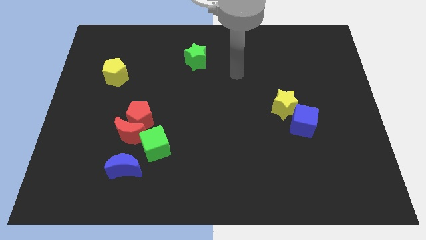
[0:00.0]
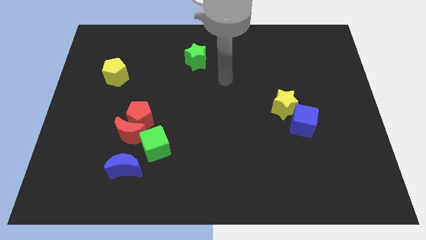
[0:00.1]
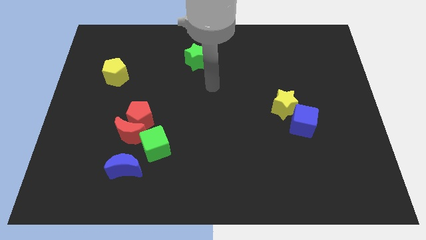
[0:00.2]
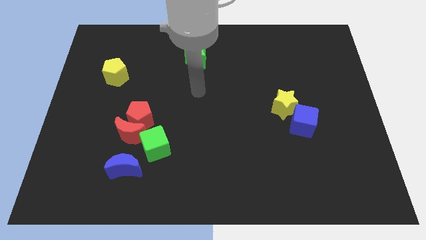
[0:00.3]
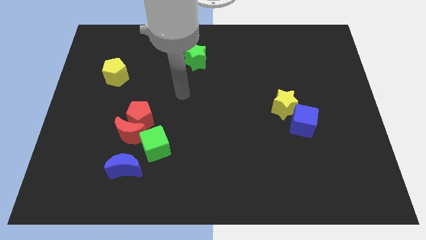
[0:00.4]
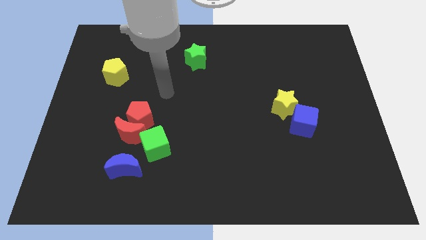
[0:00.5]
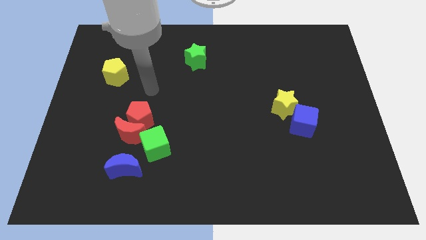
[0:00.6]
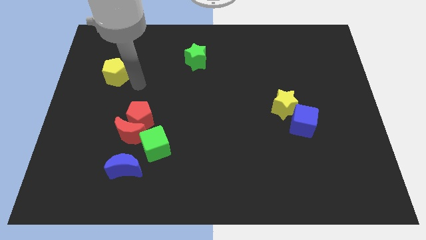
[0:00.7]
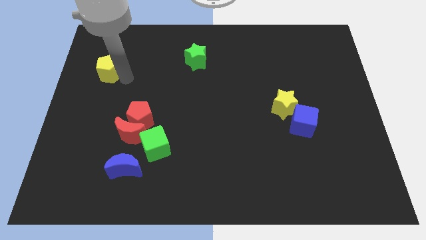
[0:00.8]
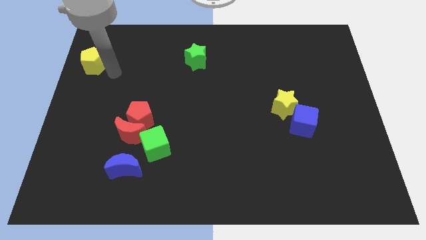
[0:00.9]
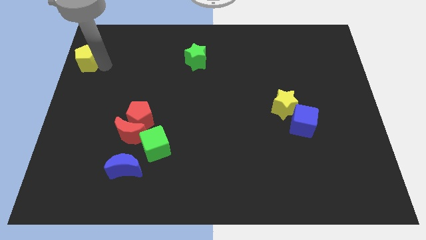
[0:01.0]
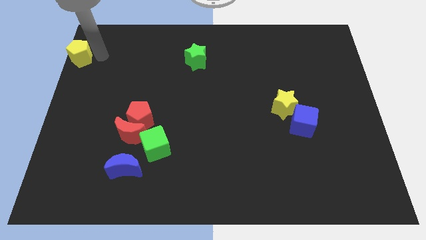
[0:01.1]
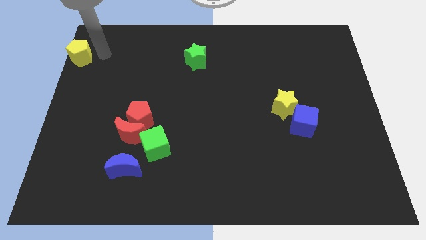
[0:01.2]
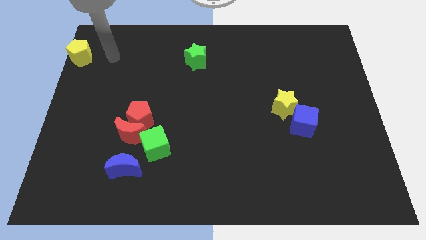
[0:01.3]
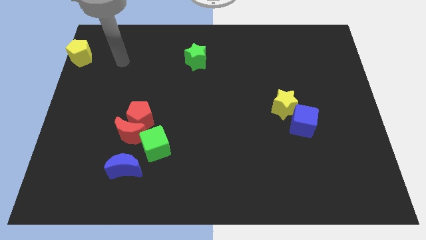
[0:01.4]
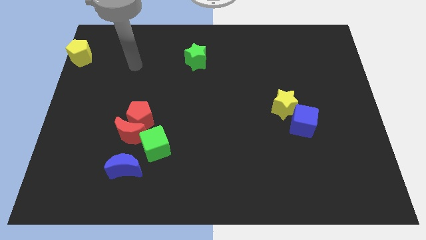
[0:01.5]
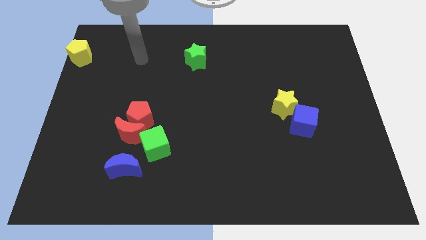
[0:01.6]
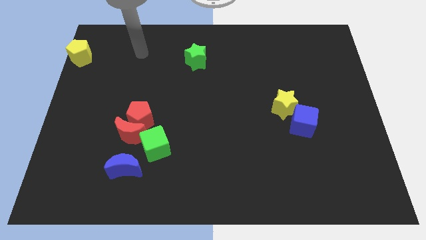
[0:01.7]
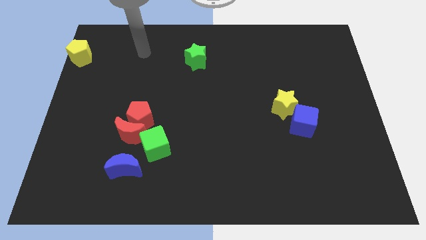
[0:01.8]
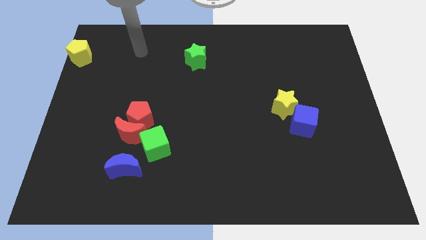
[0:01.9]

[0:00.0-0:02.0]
slide the yellow pentagon slightly to the left

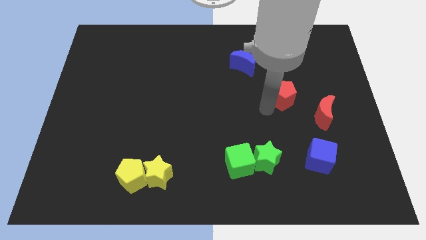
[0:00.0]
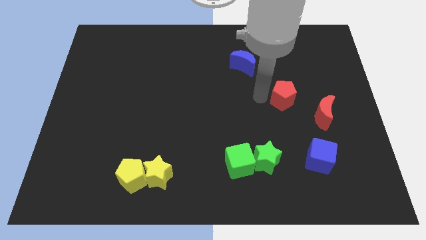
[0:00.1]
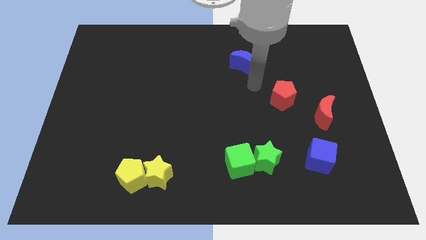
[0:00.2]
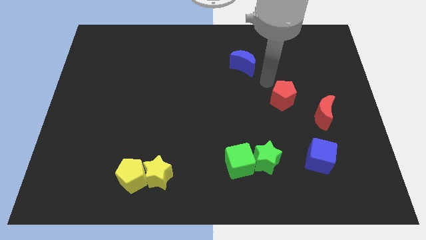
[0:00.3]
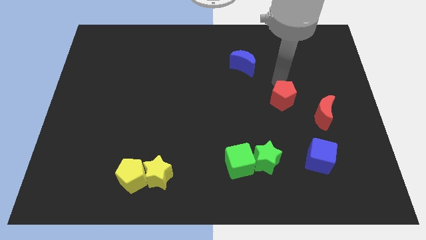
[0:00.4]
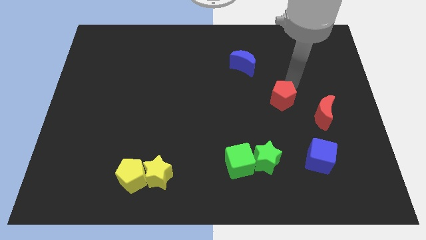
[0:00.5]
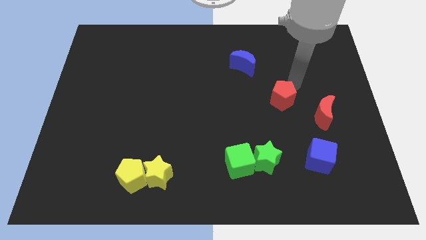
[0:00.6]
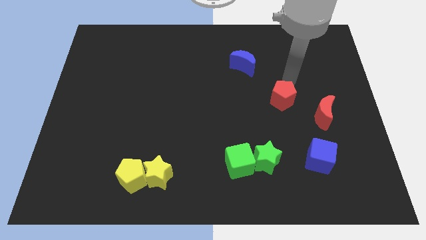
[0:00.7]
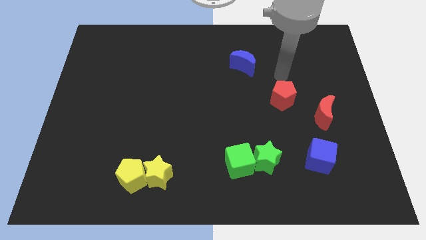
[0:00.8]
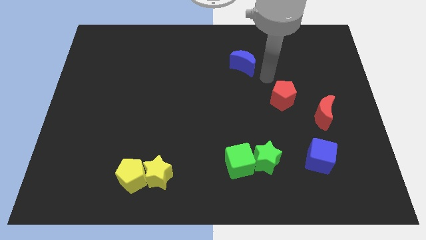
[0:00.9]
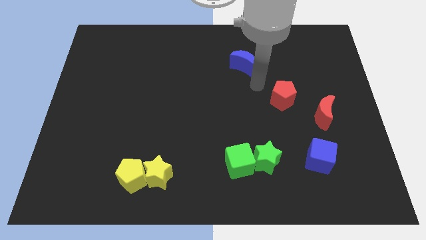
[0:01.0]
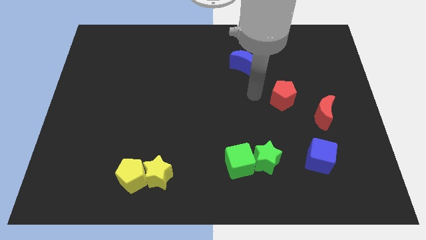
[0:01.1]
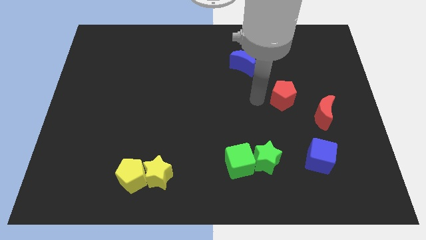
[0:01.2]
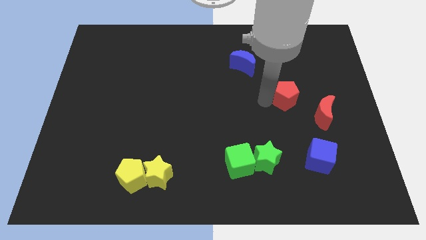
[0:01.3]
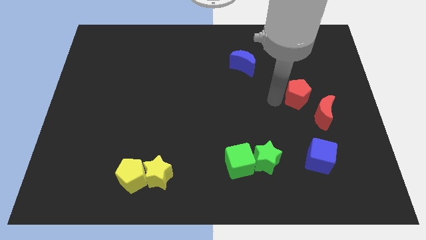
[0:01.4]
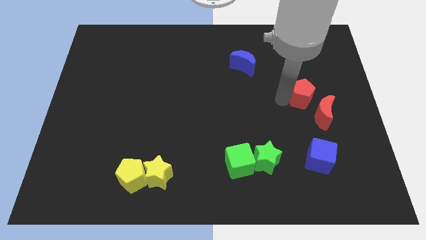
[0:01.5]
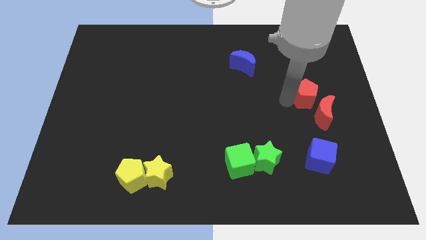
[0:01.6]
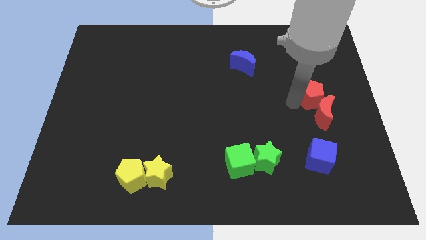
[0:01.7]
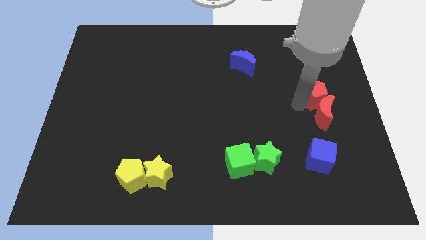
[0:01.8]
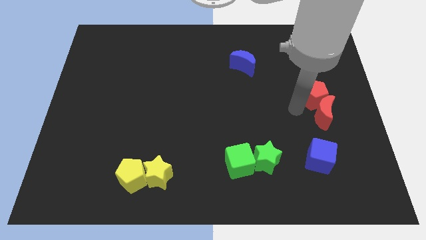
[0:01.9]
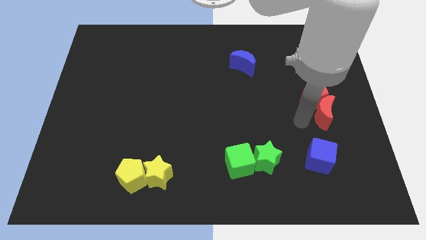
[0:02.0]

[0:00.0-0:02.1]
place the red pentagon on the top left side of the red crescent

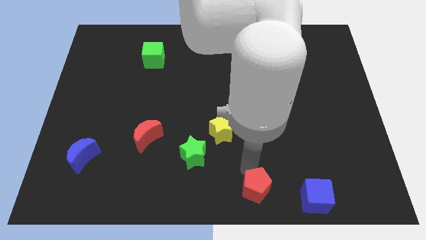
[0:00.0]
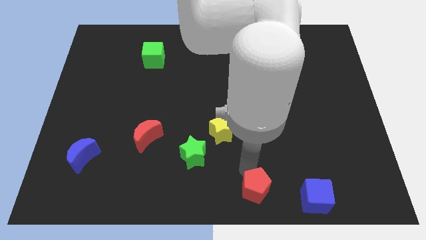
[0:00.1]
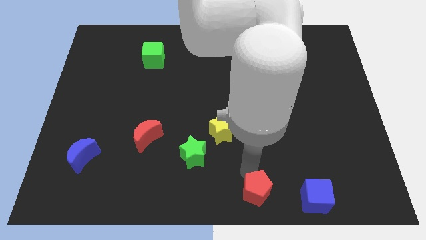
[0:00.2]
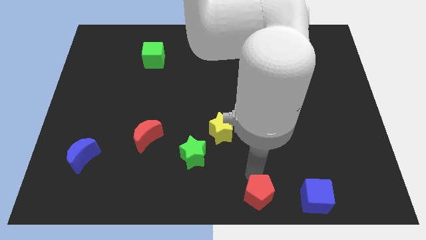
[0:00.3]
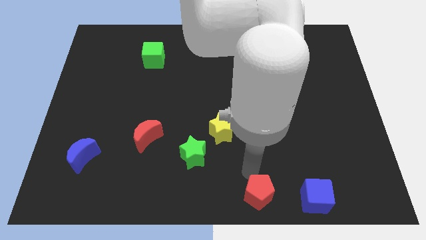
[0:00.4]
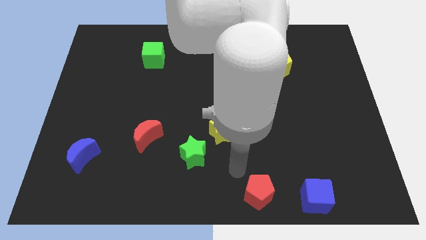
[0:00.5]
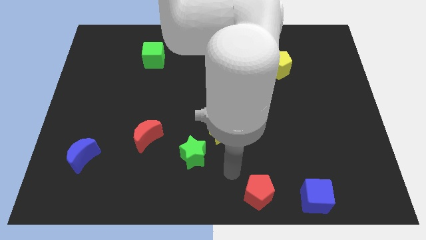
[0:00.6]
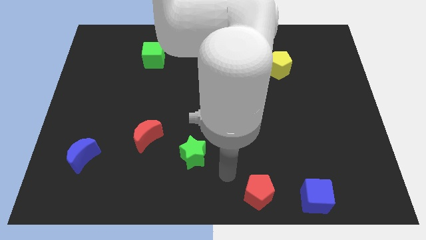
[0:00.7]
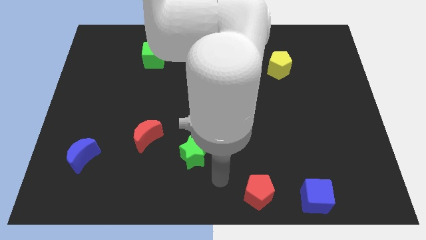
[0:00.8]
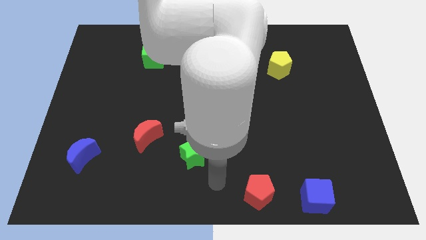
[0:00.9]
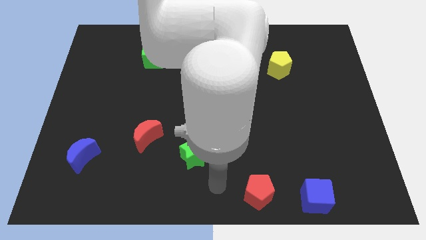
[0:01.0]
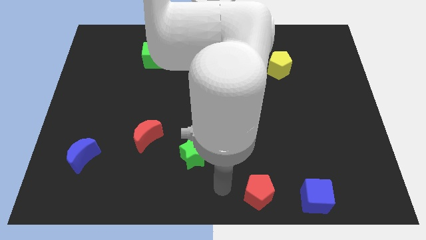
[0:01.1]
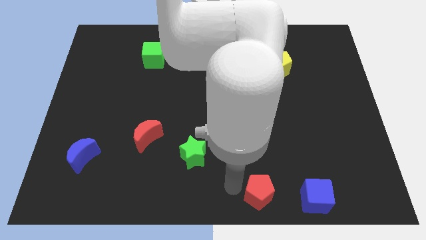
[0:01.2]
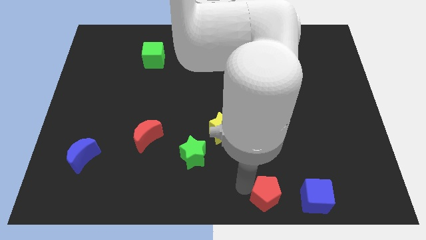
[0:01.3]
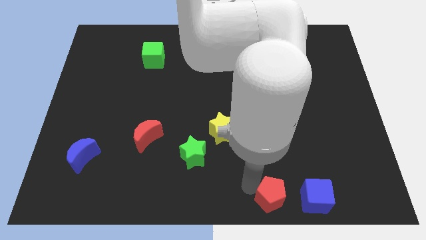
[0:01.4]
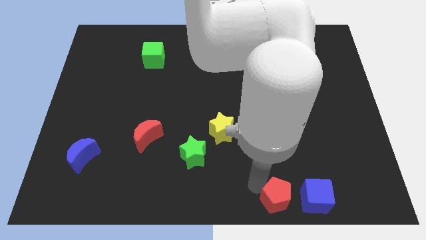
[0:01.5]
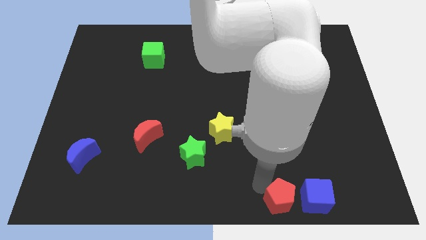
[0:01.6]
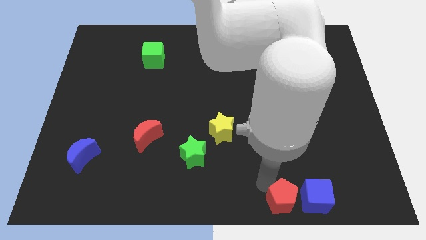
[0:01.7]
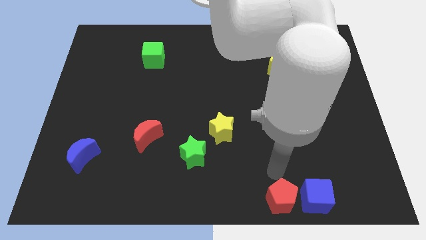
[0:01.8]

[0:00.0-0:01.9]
put the red pentagon left to the blue cube

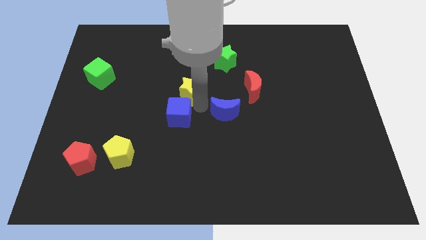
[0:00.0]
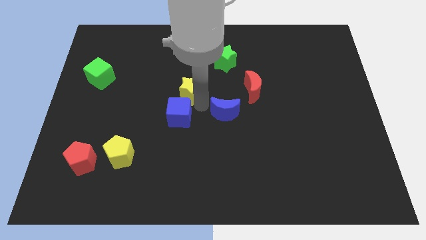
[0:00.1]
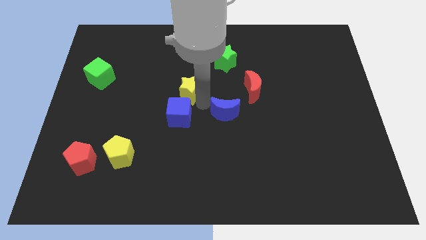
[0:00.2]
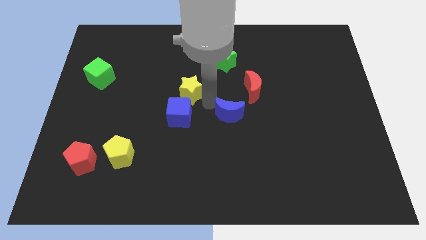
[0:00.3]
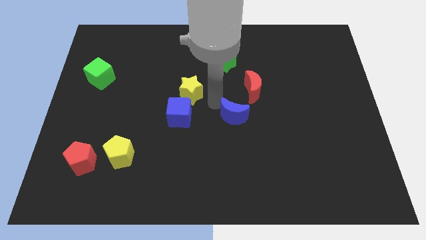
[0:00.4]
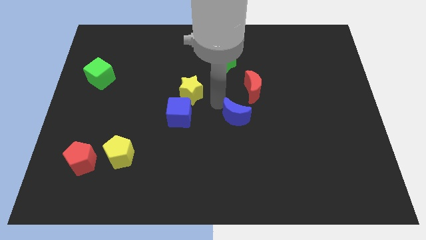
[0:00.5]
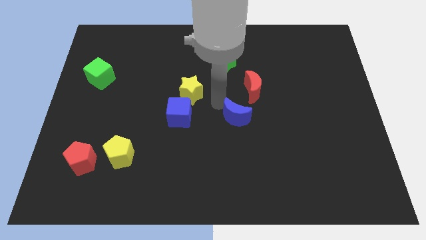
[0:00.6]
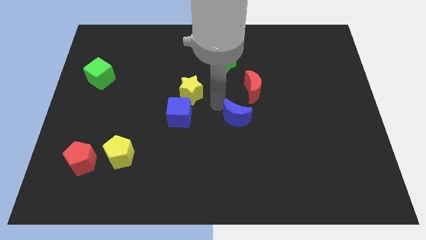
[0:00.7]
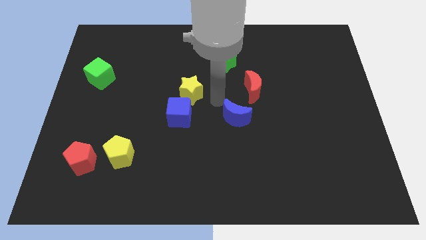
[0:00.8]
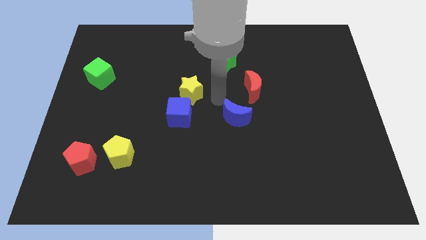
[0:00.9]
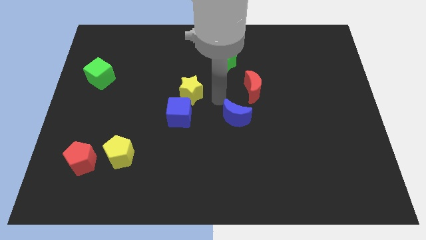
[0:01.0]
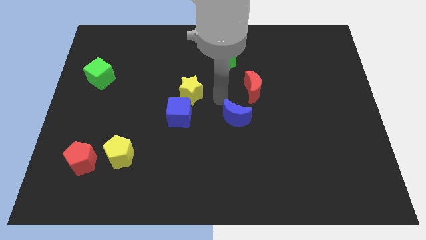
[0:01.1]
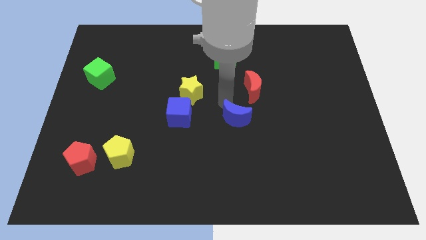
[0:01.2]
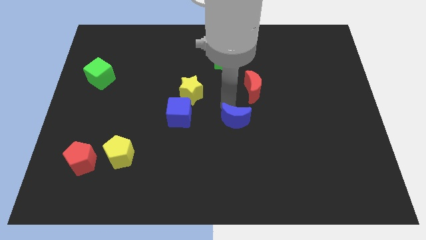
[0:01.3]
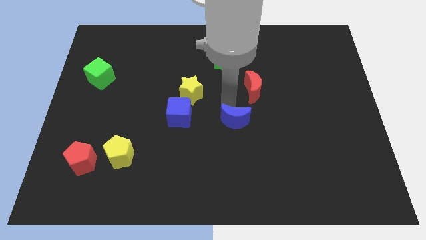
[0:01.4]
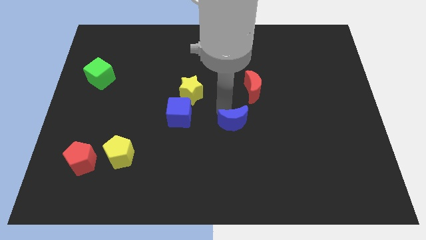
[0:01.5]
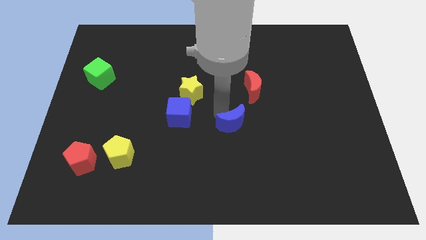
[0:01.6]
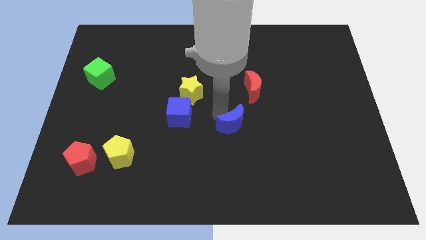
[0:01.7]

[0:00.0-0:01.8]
move the blue crescent slightly to the bottom center of the board

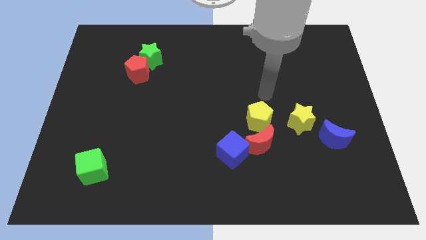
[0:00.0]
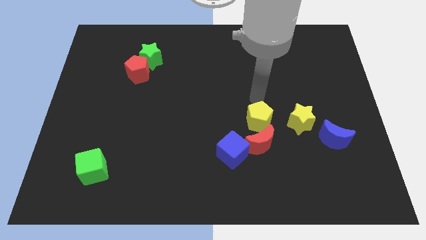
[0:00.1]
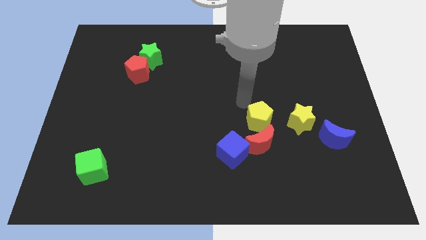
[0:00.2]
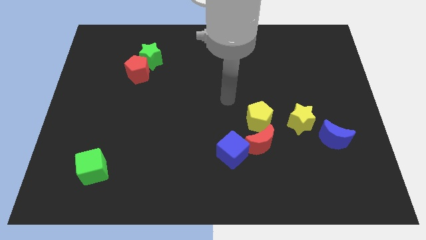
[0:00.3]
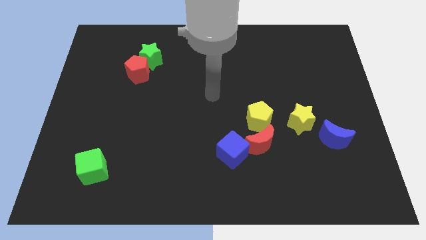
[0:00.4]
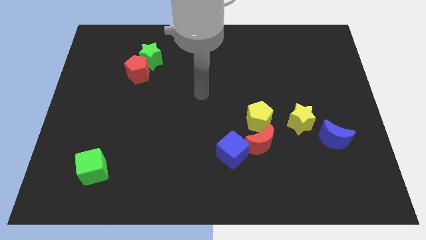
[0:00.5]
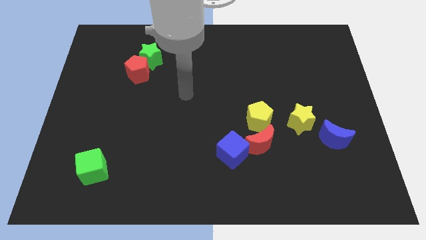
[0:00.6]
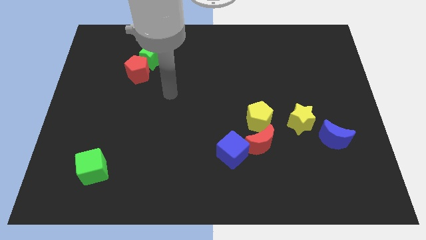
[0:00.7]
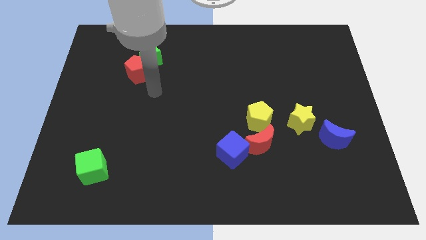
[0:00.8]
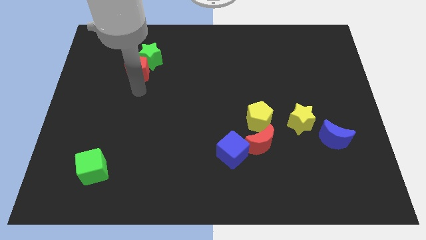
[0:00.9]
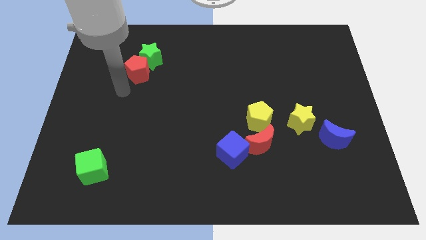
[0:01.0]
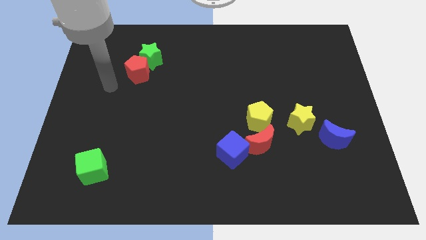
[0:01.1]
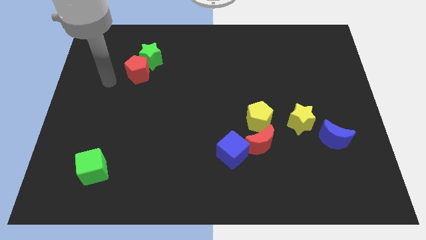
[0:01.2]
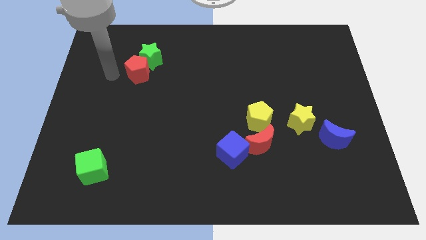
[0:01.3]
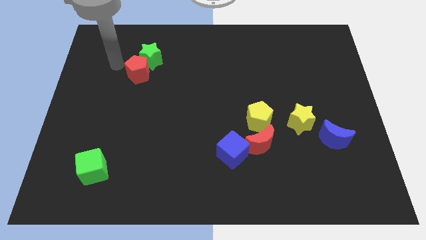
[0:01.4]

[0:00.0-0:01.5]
point your arm left to red pentagon
